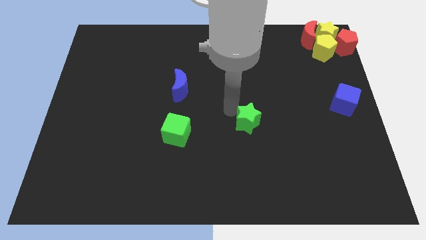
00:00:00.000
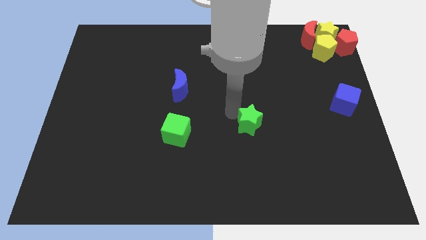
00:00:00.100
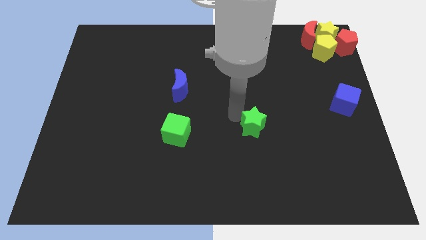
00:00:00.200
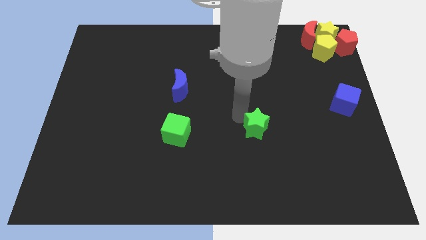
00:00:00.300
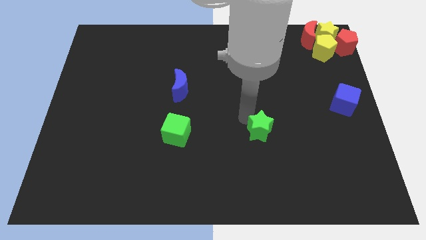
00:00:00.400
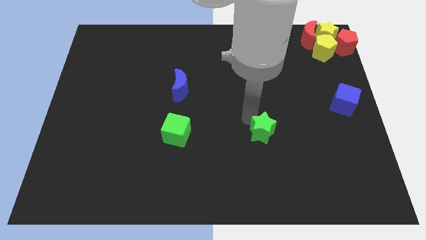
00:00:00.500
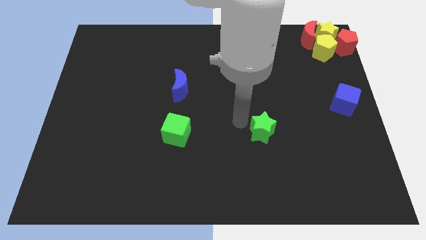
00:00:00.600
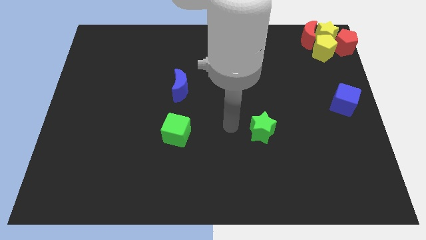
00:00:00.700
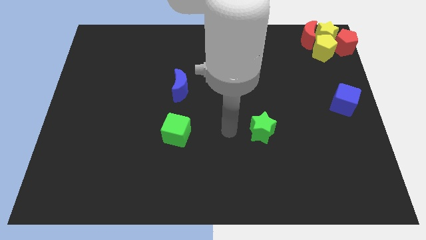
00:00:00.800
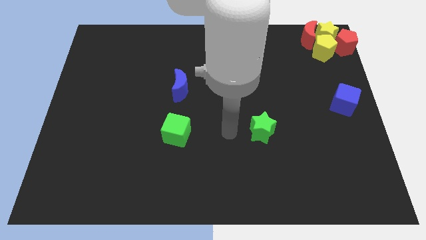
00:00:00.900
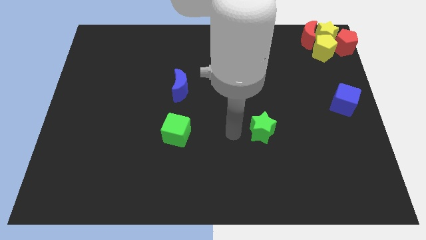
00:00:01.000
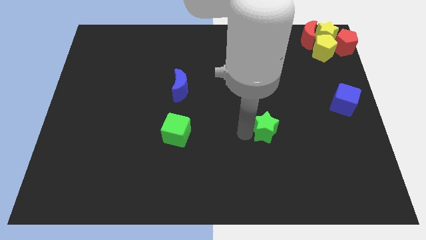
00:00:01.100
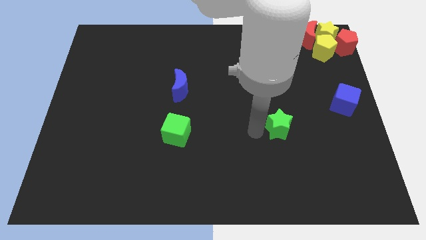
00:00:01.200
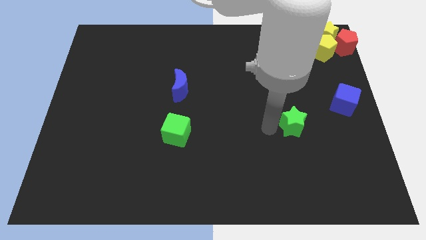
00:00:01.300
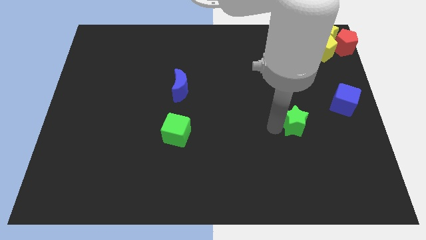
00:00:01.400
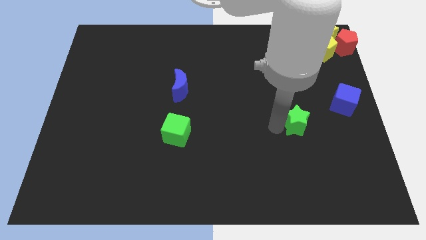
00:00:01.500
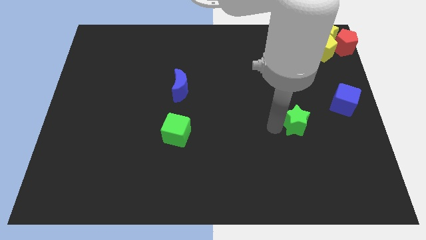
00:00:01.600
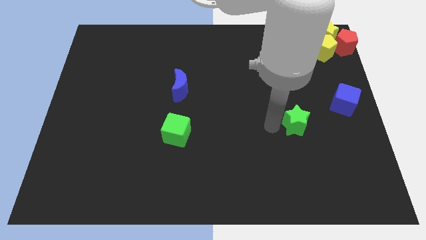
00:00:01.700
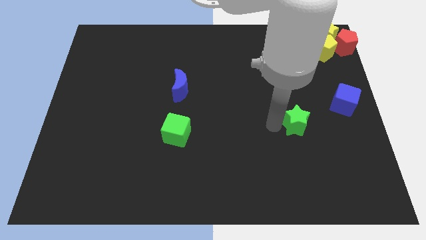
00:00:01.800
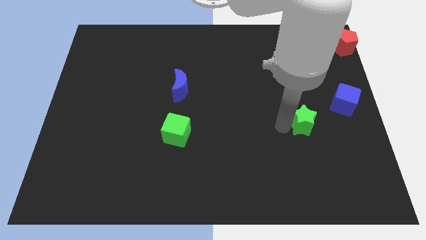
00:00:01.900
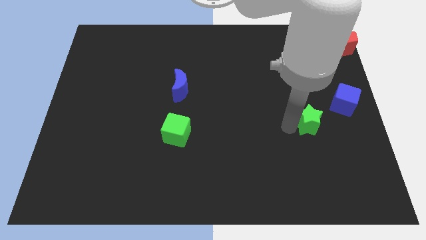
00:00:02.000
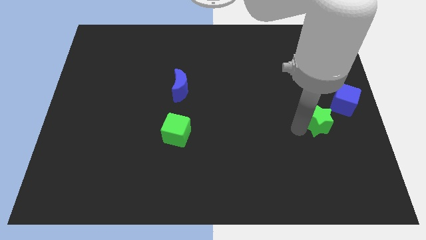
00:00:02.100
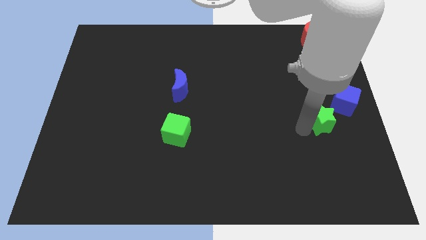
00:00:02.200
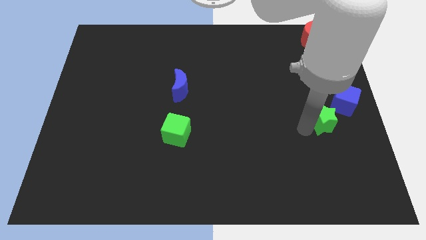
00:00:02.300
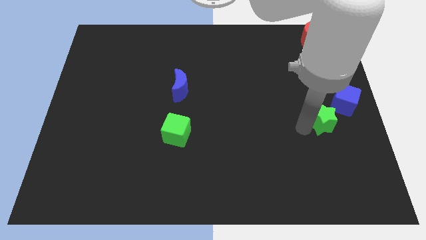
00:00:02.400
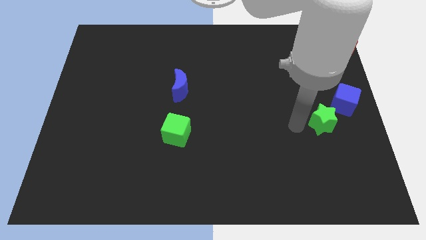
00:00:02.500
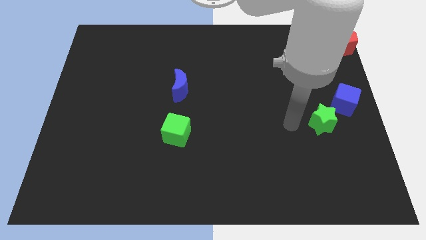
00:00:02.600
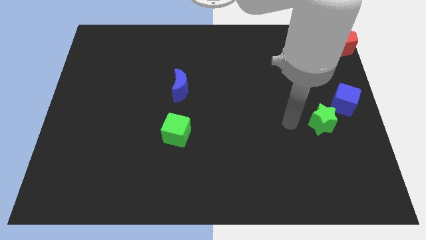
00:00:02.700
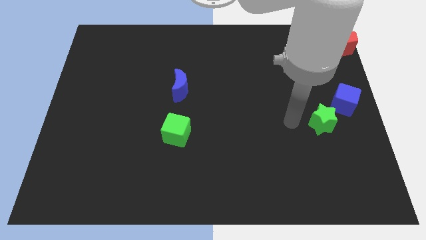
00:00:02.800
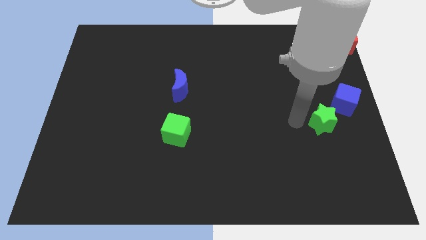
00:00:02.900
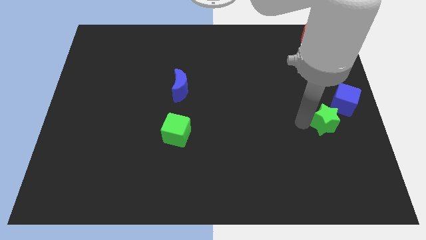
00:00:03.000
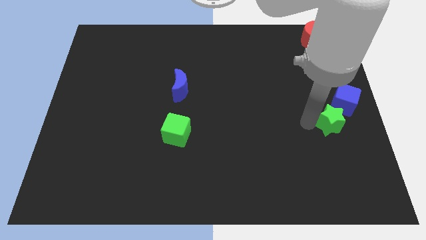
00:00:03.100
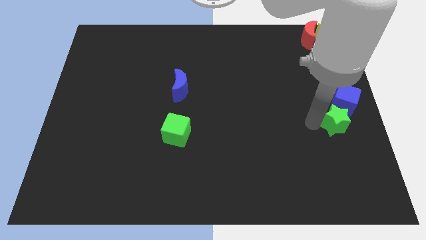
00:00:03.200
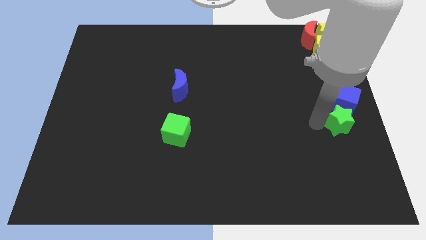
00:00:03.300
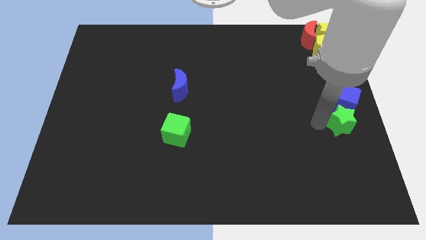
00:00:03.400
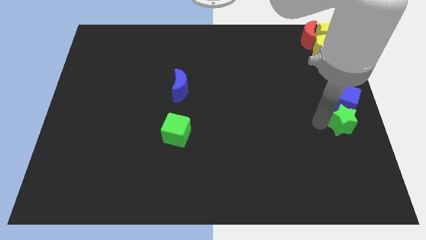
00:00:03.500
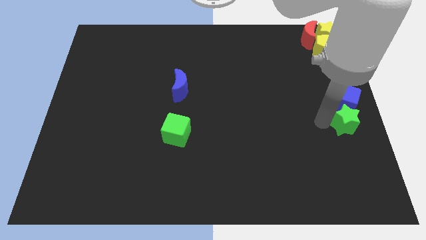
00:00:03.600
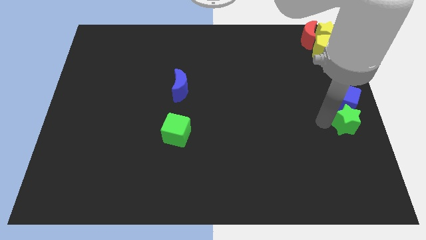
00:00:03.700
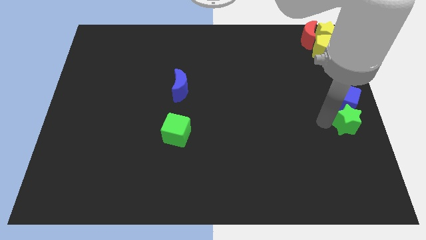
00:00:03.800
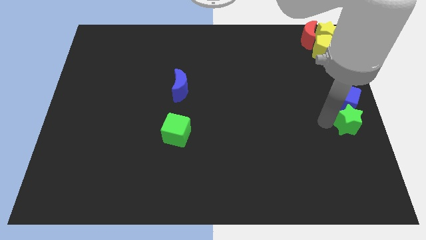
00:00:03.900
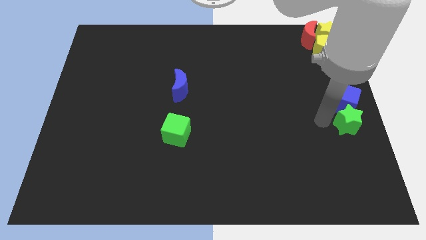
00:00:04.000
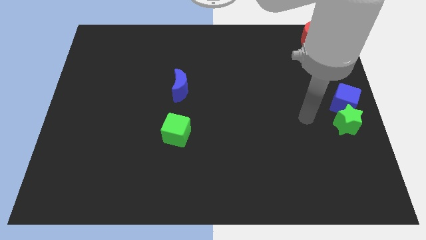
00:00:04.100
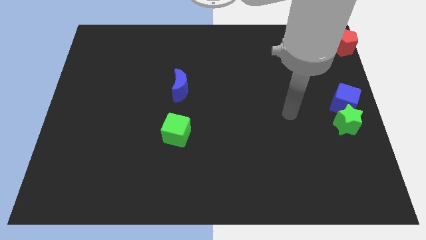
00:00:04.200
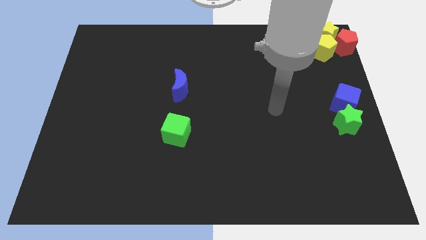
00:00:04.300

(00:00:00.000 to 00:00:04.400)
push the green star to the bottom side of the blue cube

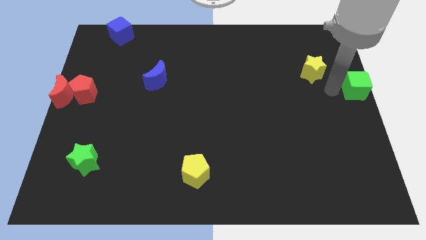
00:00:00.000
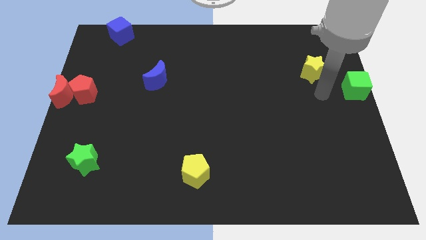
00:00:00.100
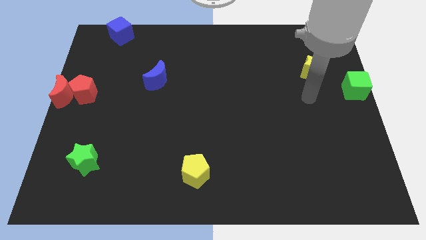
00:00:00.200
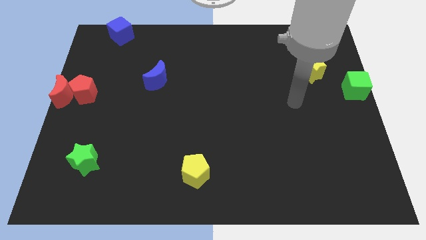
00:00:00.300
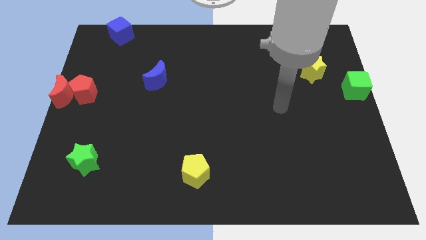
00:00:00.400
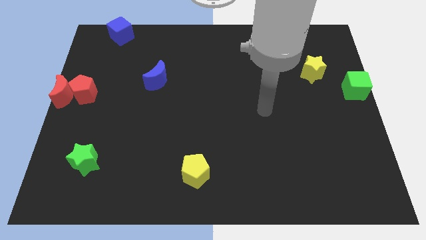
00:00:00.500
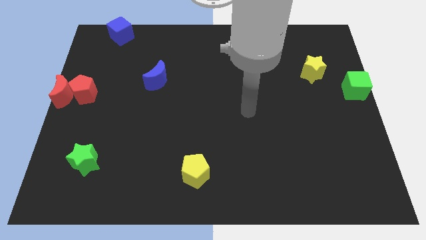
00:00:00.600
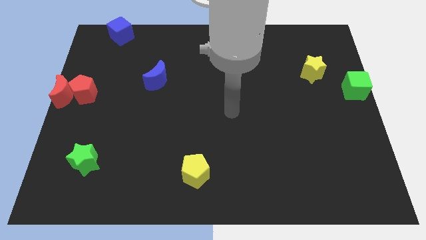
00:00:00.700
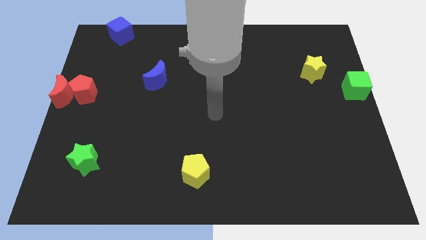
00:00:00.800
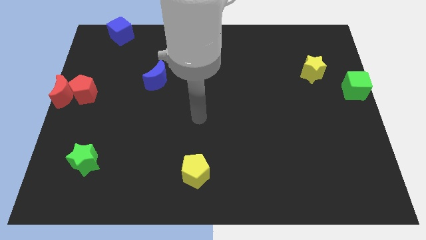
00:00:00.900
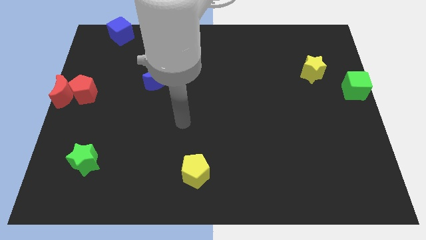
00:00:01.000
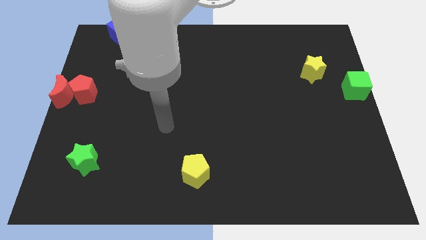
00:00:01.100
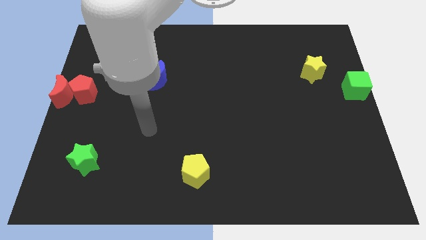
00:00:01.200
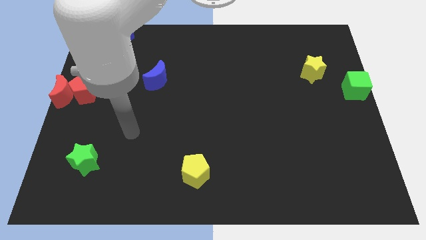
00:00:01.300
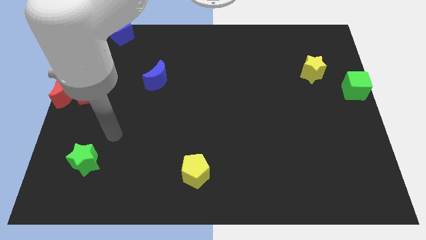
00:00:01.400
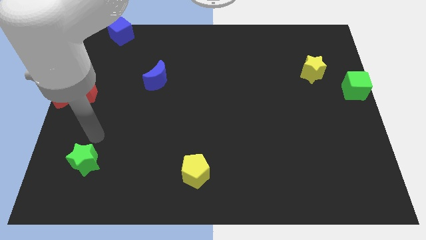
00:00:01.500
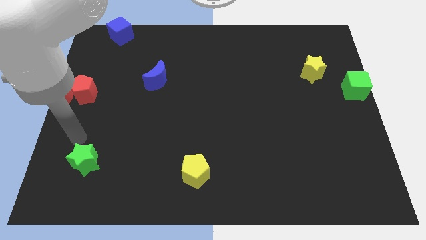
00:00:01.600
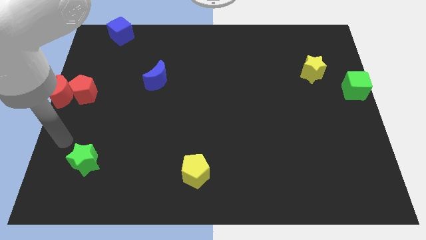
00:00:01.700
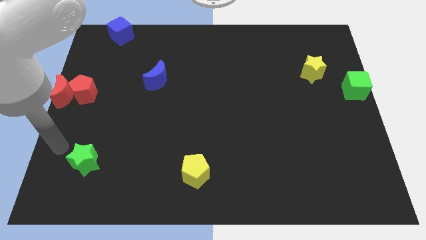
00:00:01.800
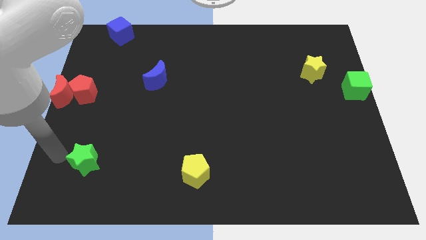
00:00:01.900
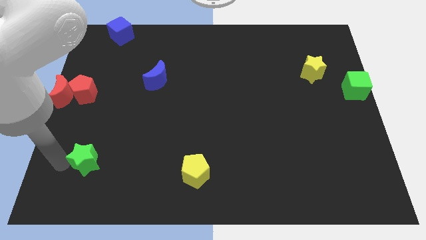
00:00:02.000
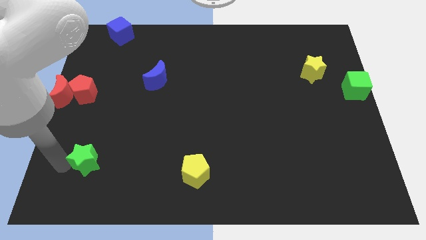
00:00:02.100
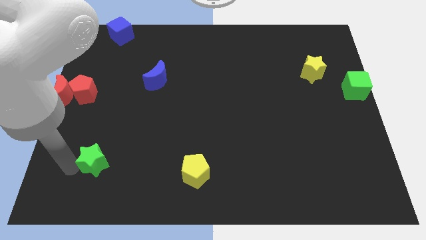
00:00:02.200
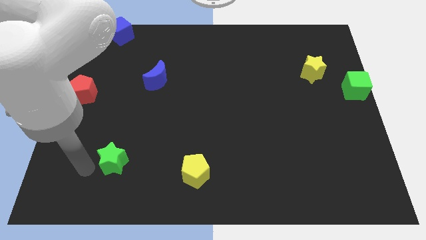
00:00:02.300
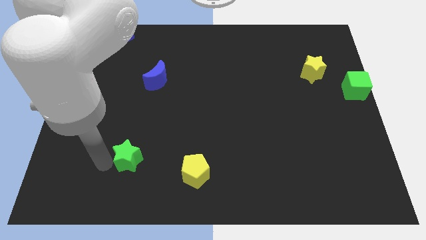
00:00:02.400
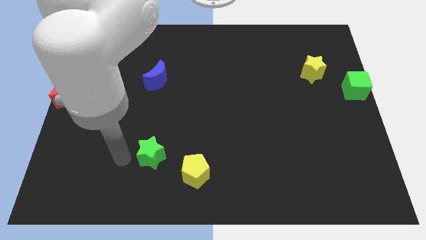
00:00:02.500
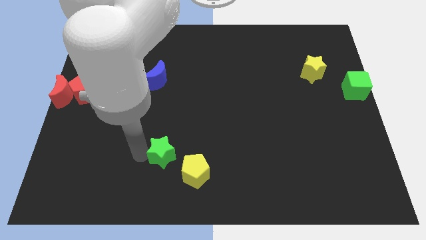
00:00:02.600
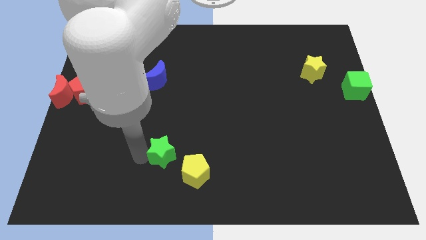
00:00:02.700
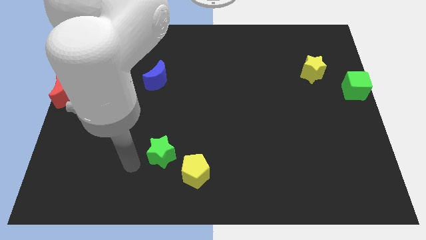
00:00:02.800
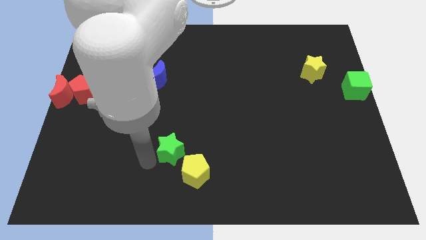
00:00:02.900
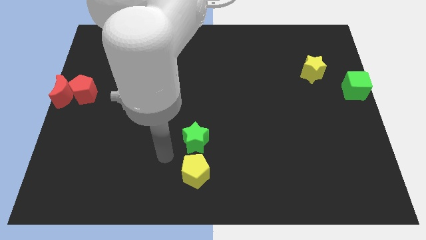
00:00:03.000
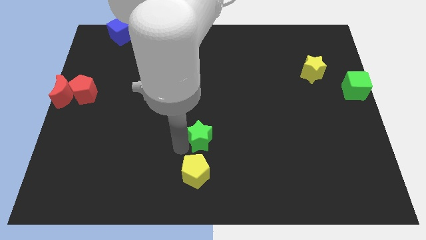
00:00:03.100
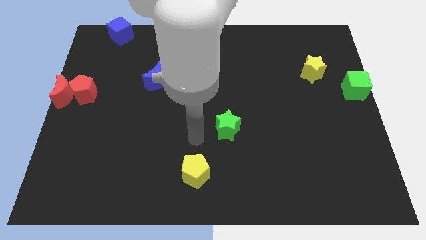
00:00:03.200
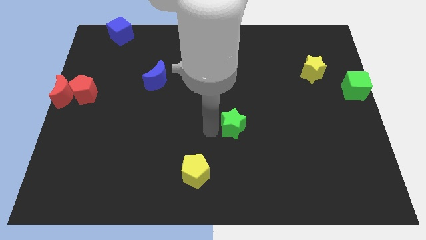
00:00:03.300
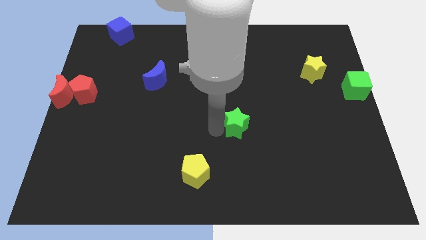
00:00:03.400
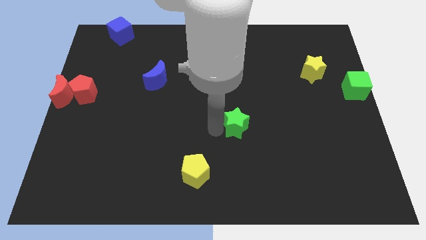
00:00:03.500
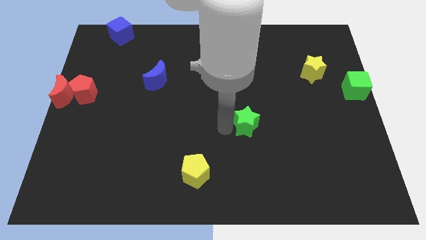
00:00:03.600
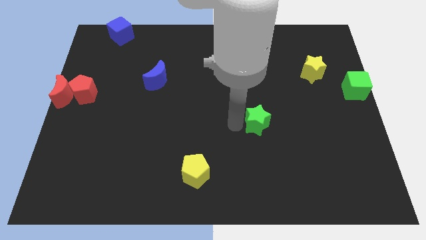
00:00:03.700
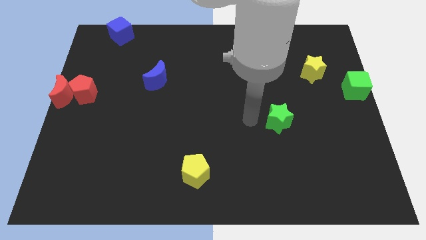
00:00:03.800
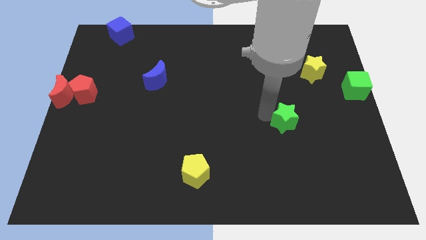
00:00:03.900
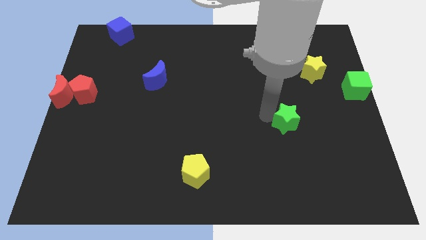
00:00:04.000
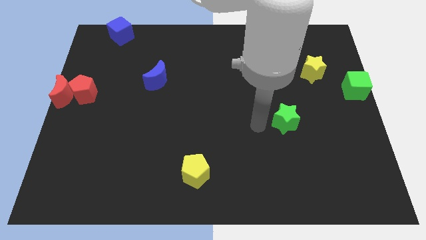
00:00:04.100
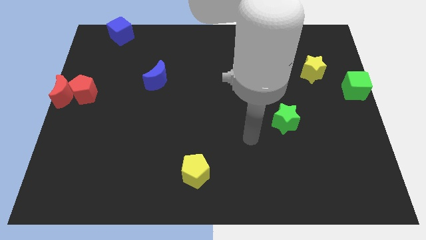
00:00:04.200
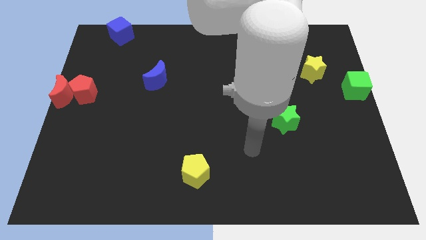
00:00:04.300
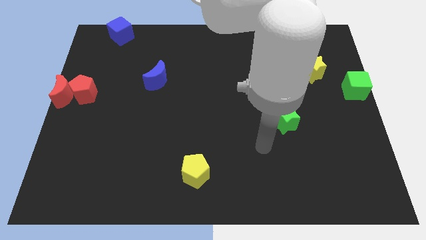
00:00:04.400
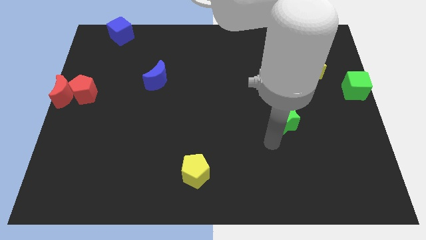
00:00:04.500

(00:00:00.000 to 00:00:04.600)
move your arm away from the green cube
